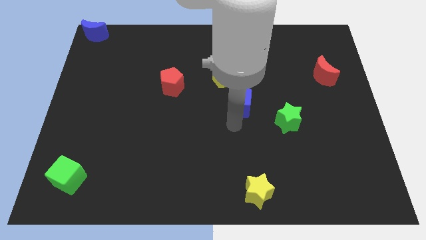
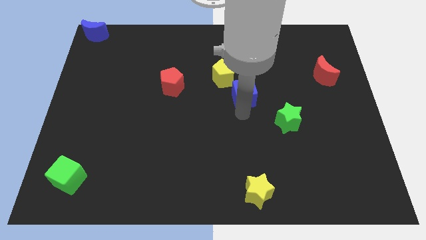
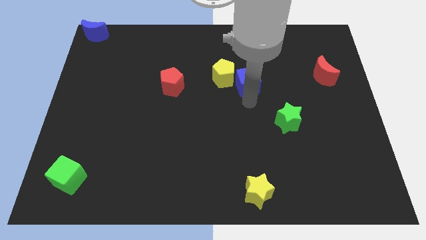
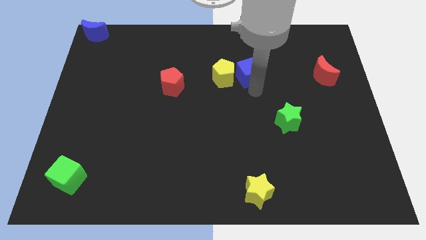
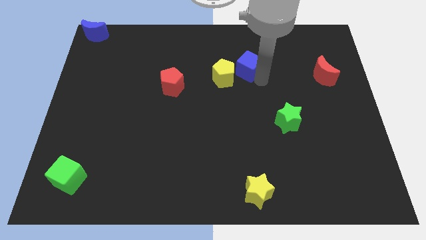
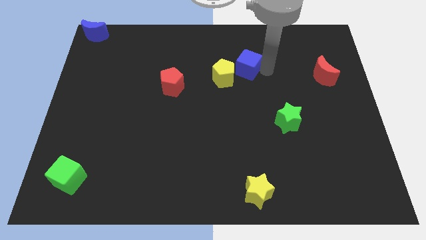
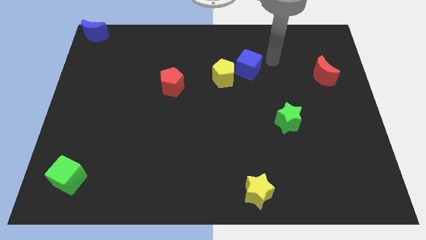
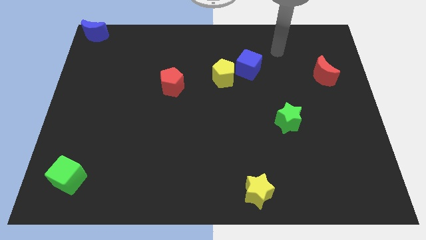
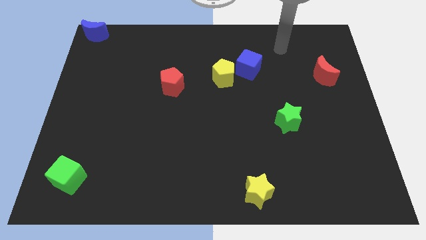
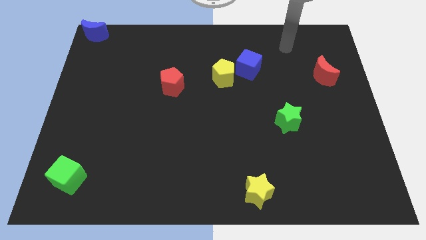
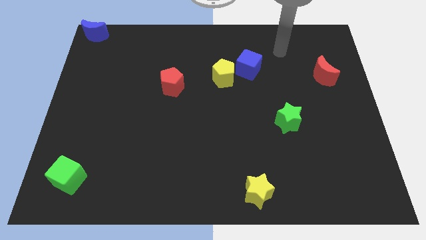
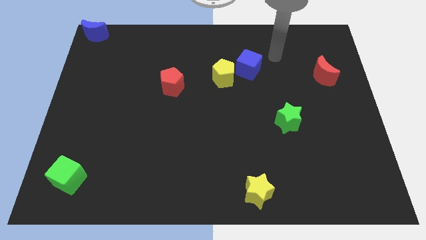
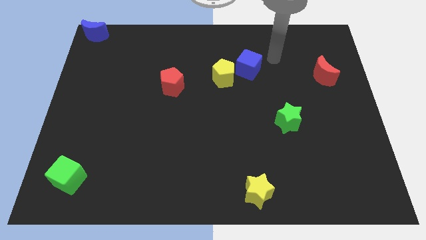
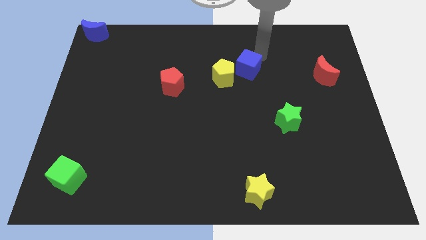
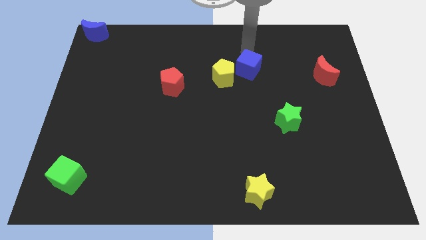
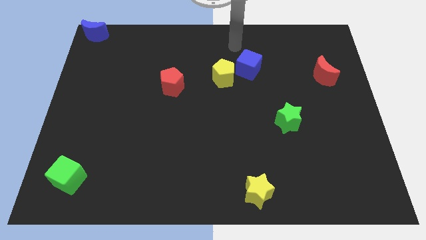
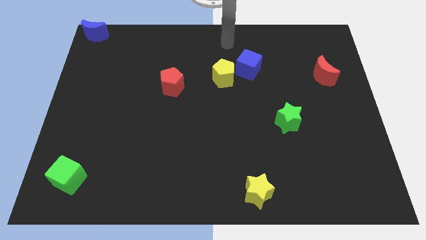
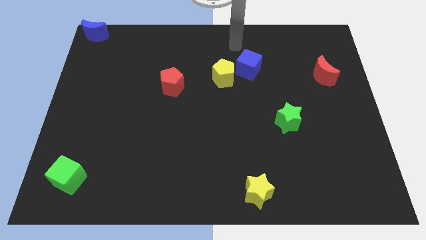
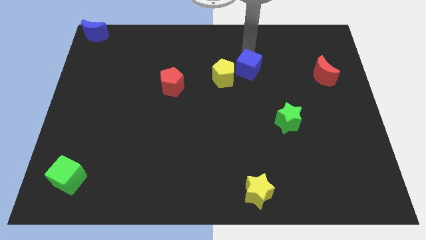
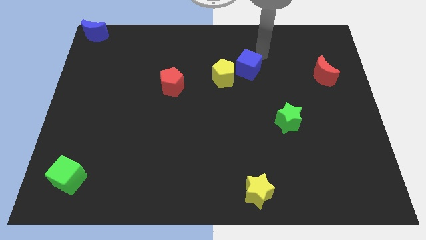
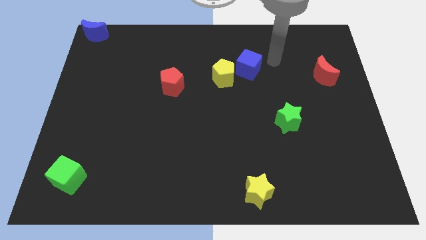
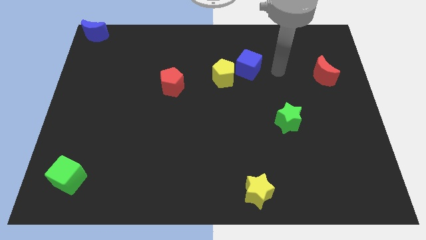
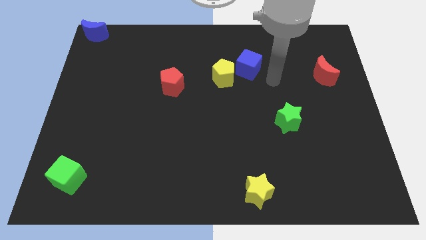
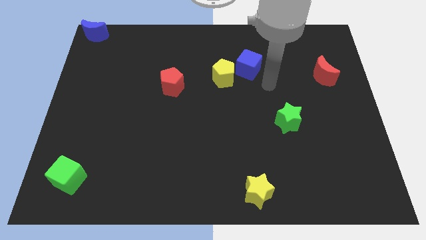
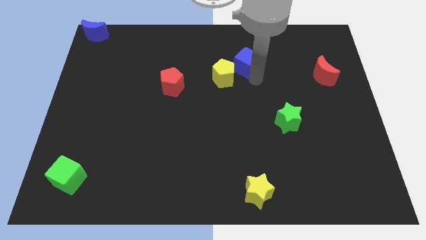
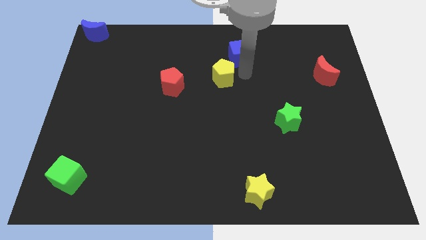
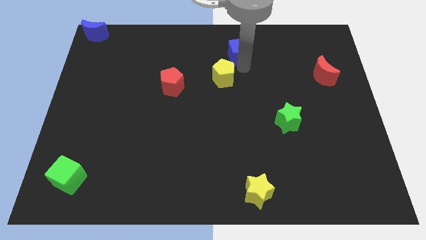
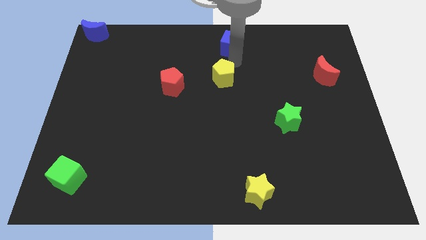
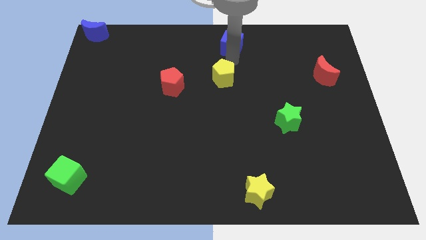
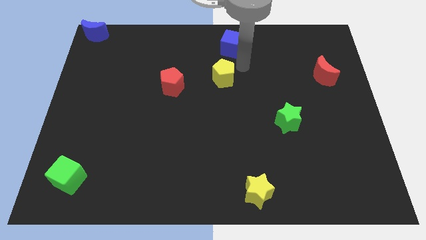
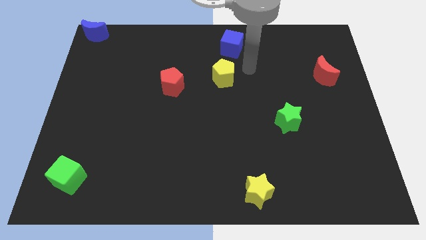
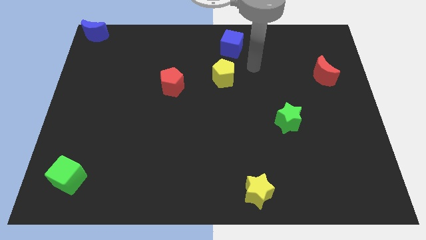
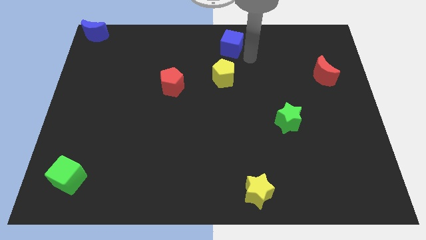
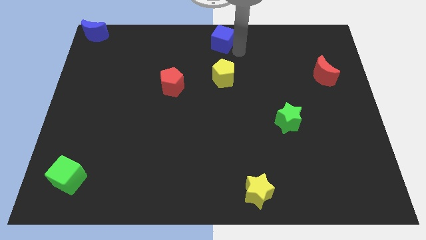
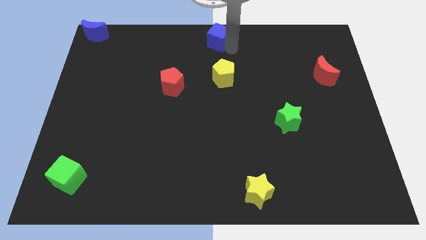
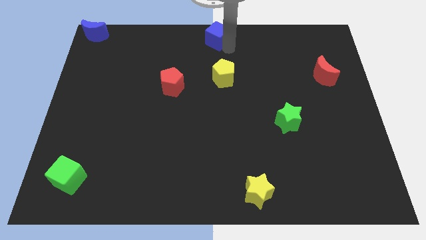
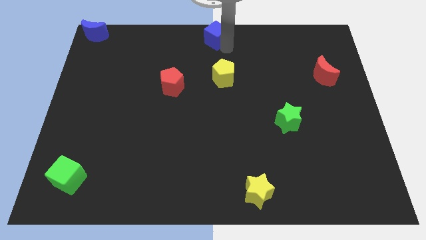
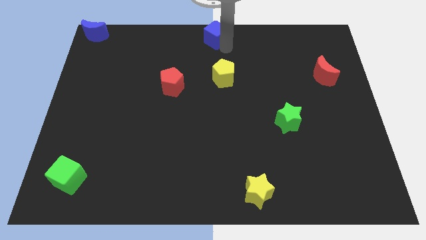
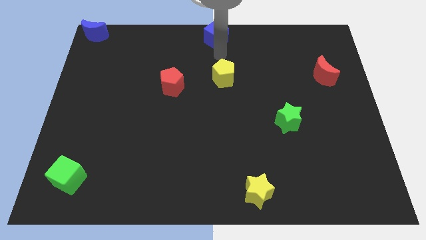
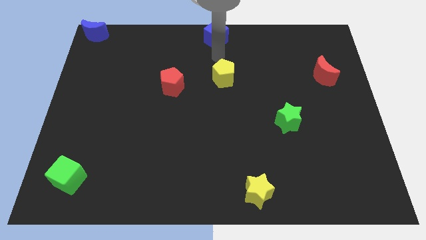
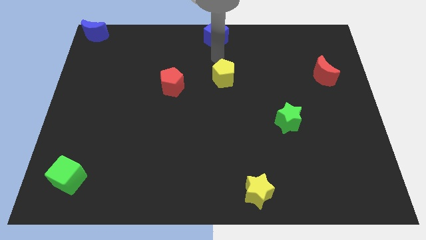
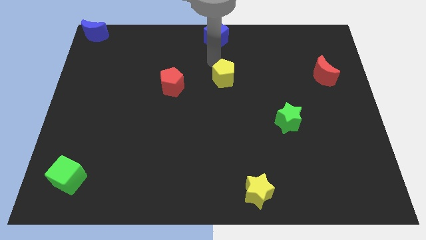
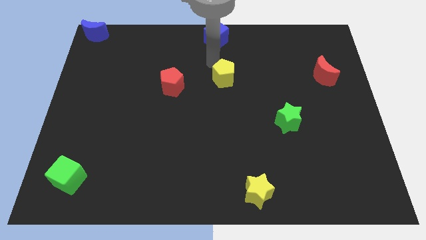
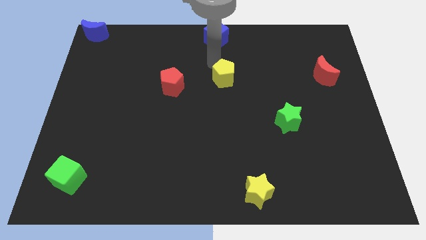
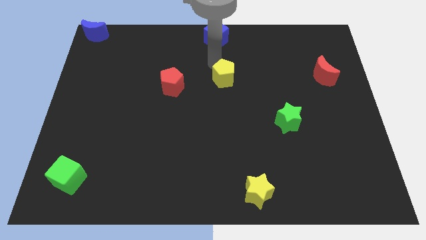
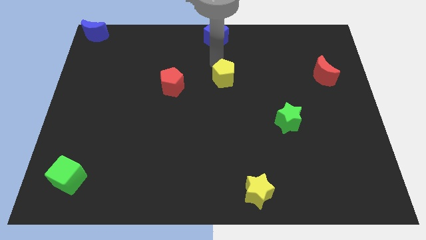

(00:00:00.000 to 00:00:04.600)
place the blue cube at the top center of the board

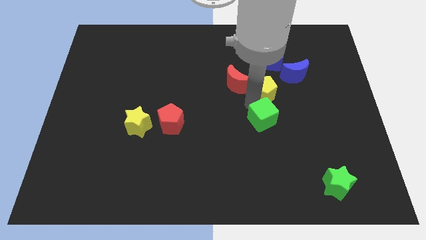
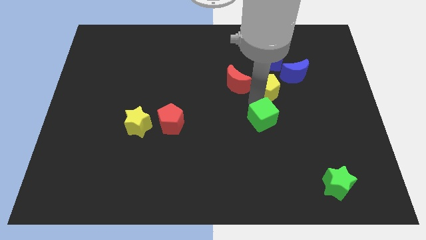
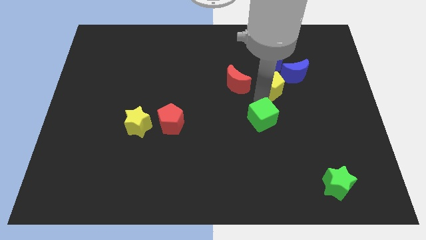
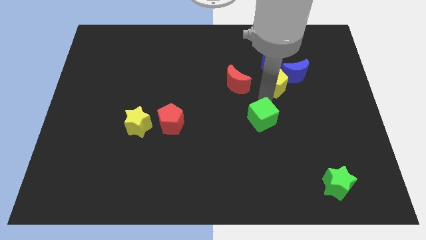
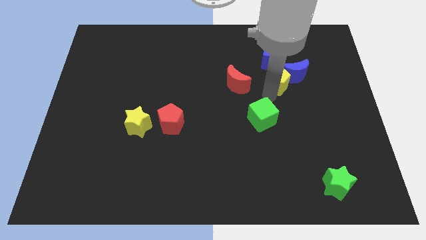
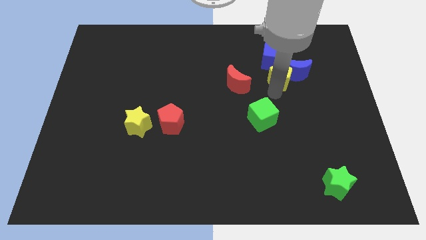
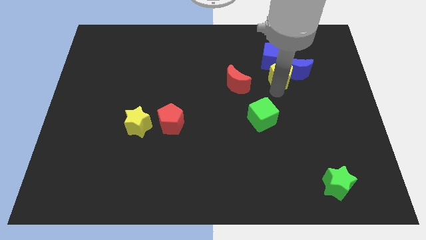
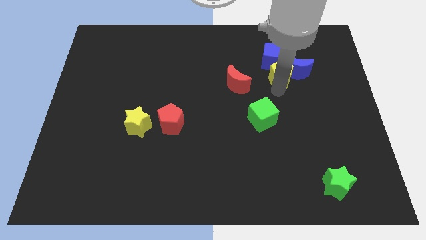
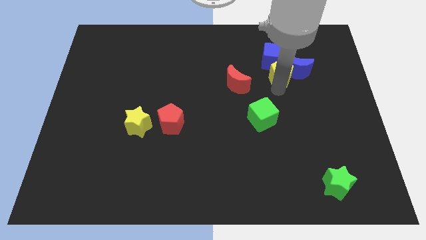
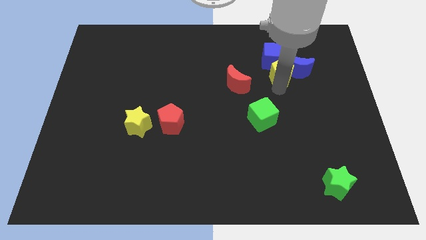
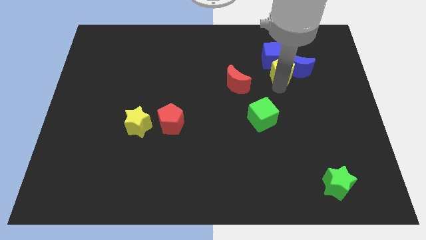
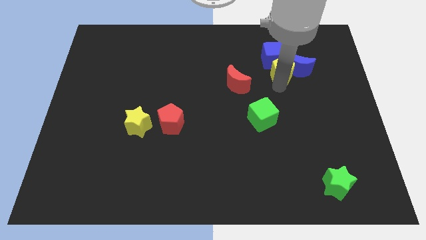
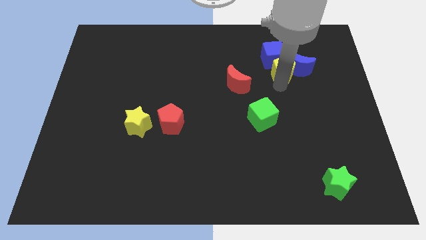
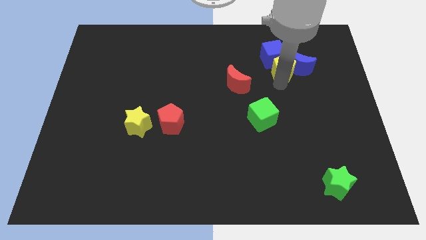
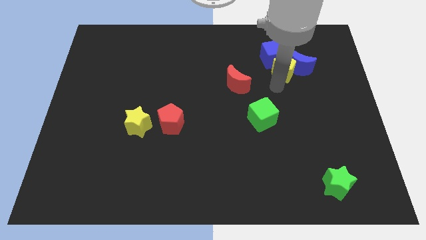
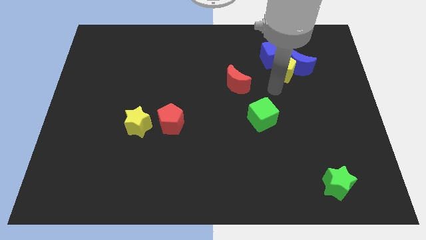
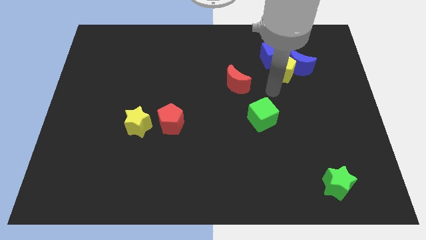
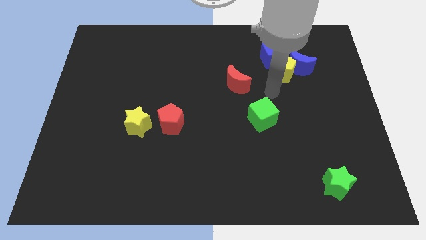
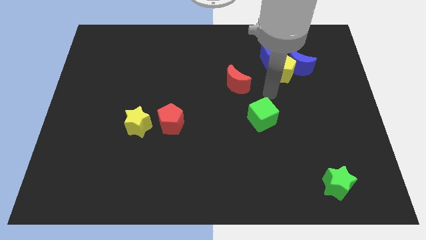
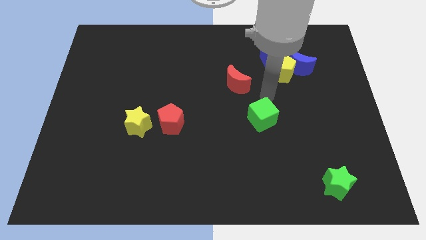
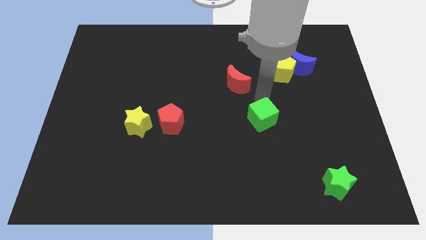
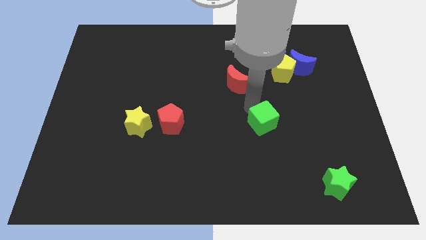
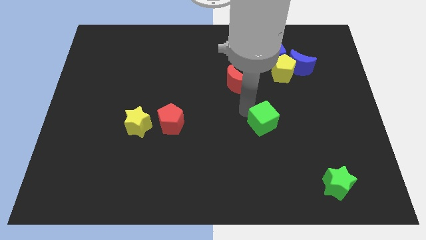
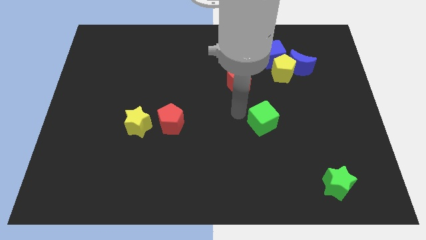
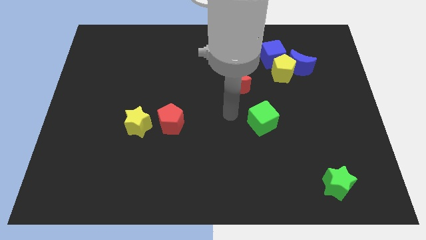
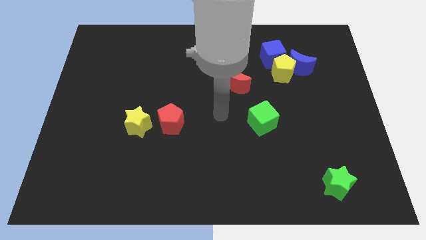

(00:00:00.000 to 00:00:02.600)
push the yellow pentagon into the blue cube and the blue moon

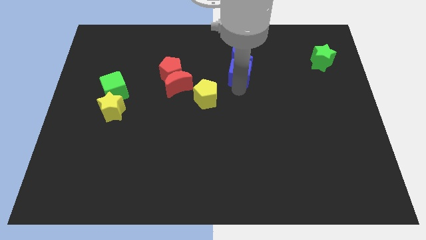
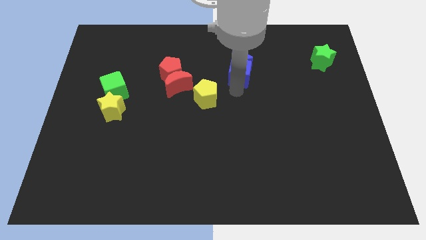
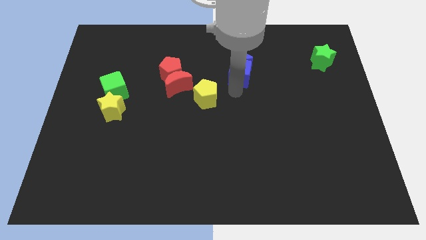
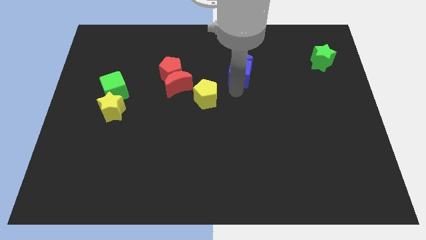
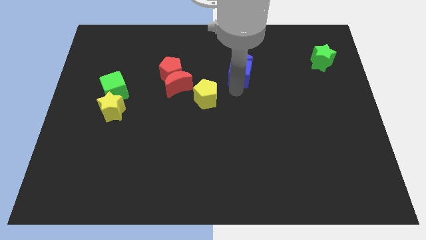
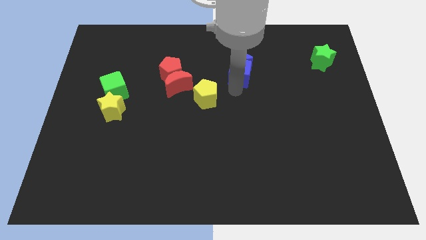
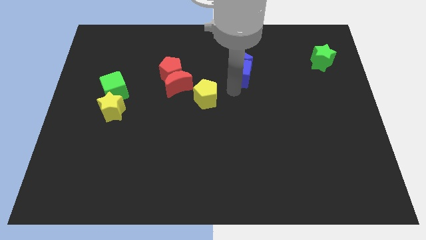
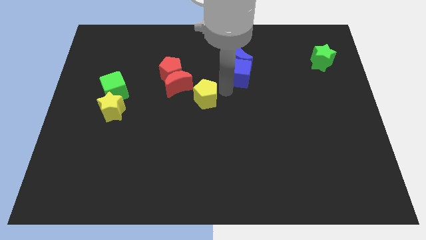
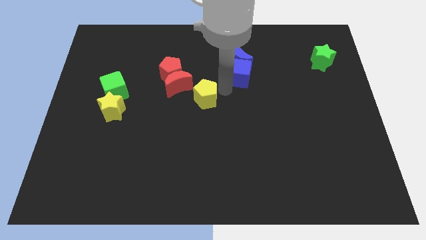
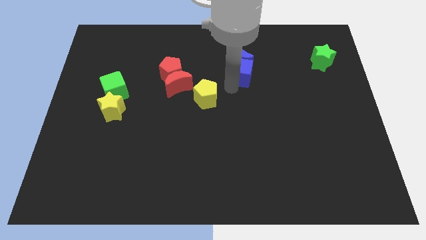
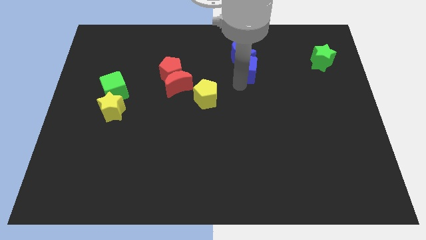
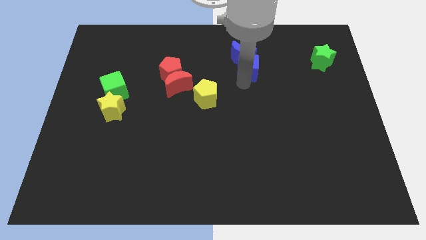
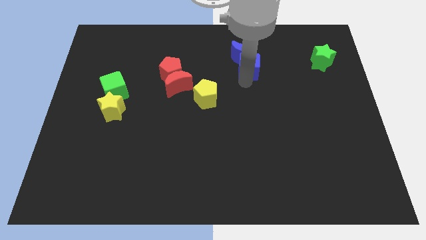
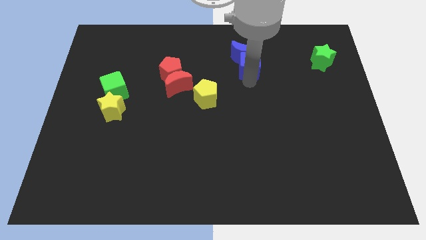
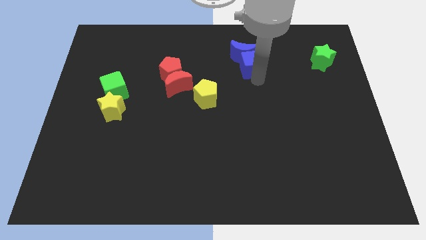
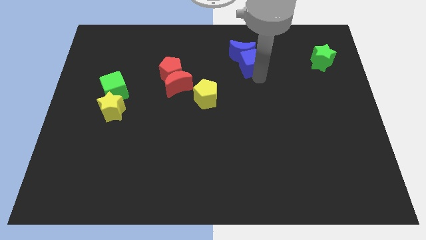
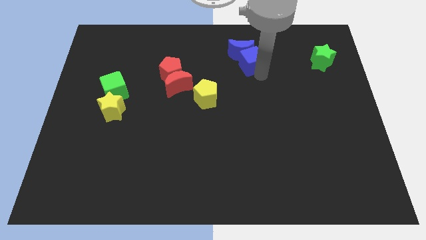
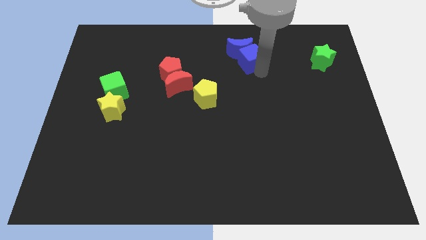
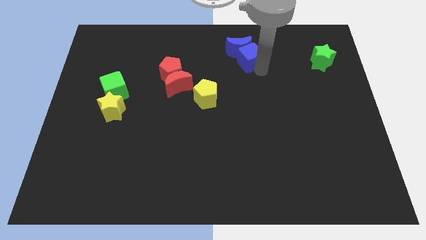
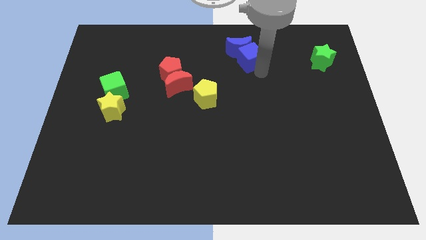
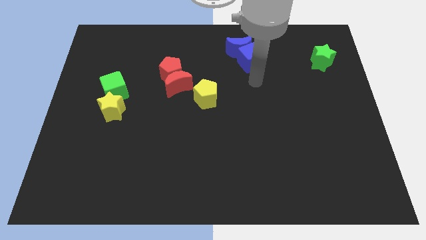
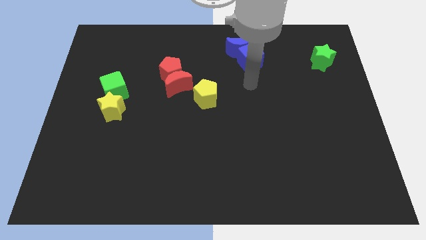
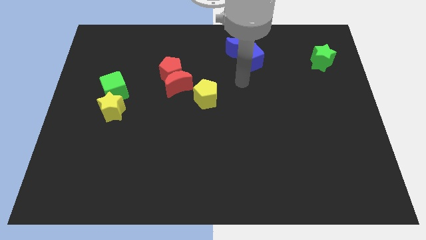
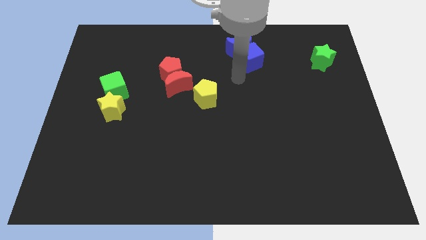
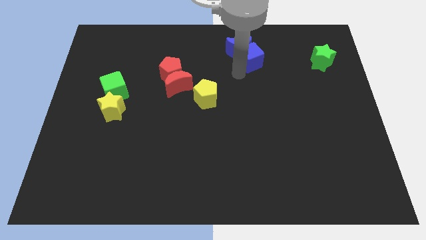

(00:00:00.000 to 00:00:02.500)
move blue cube and blue crescent slightly upwards
